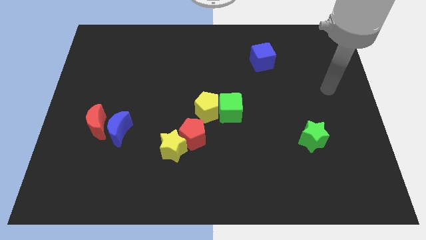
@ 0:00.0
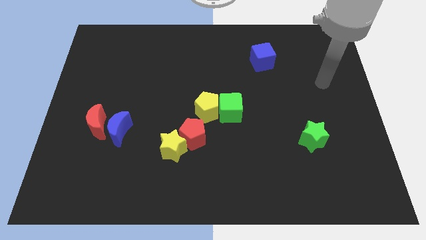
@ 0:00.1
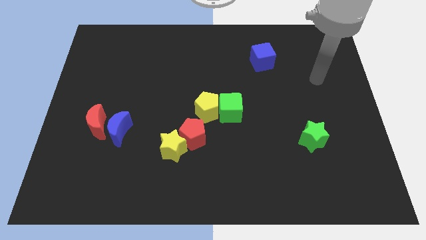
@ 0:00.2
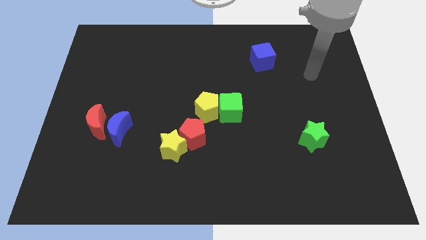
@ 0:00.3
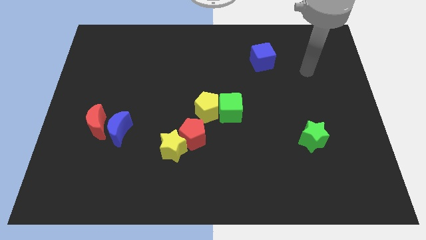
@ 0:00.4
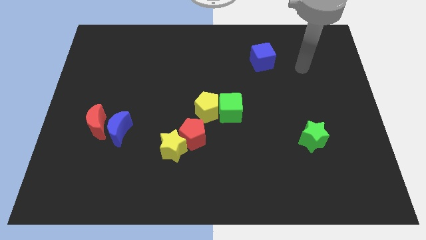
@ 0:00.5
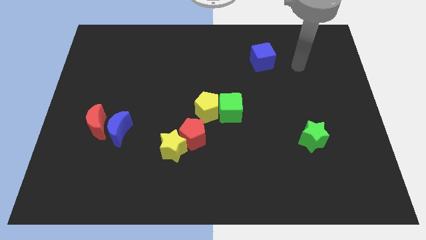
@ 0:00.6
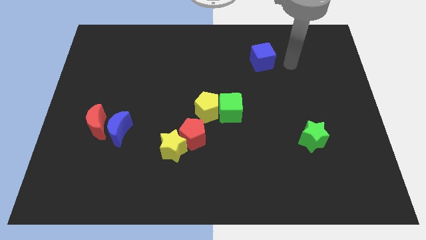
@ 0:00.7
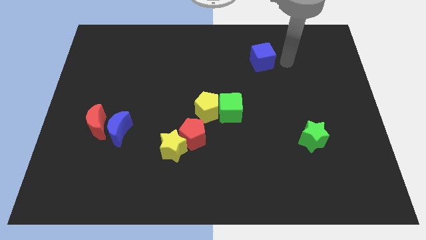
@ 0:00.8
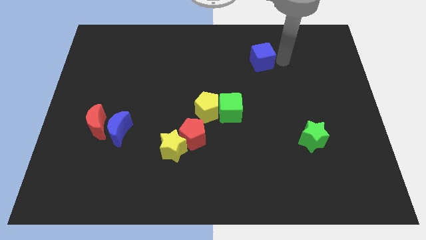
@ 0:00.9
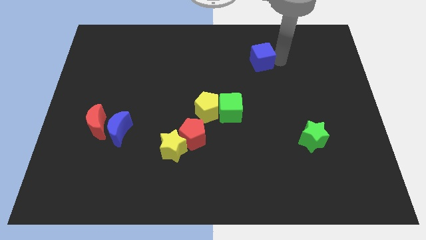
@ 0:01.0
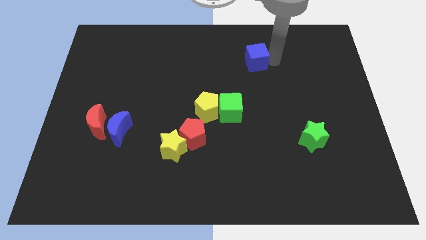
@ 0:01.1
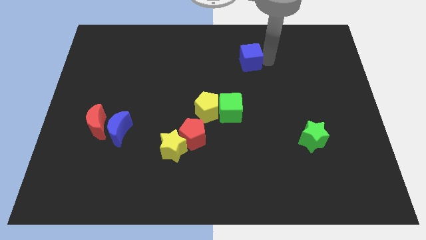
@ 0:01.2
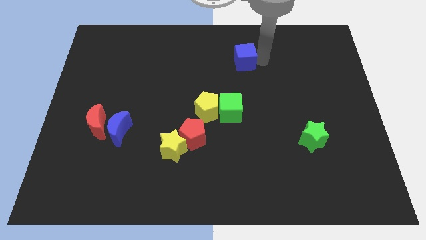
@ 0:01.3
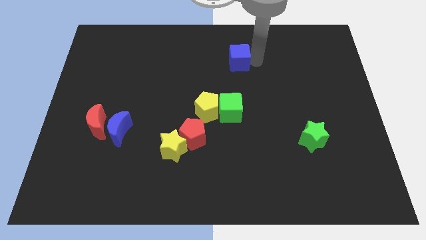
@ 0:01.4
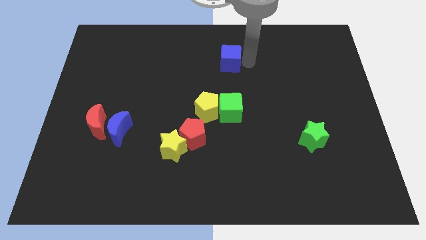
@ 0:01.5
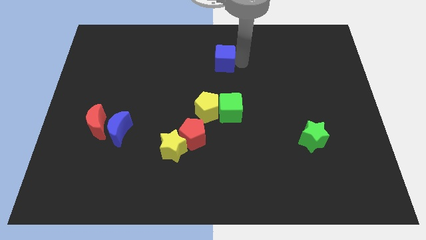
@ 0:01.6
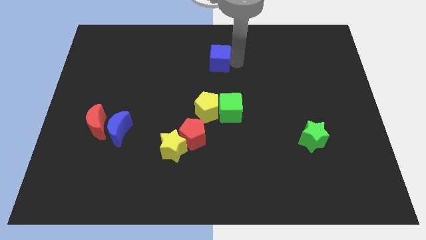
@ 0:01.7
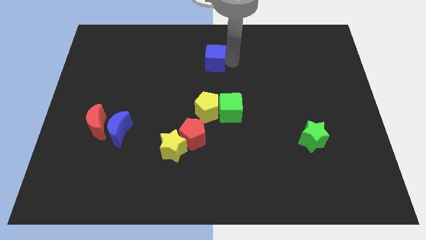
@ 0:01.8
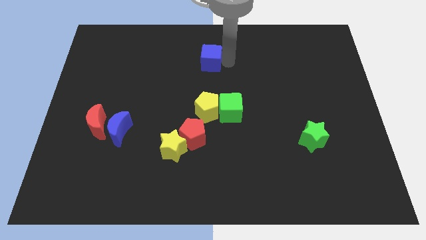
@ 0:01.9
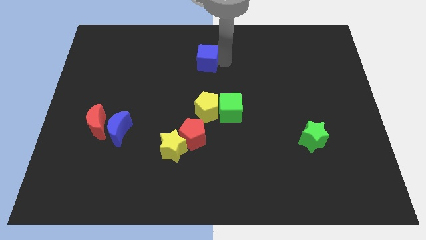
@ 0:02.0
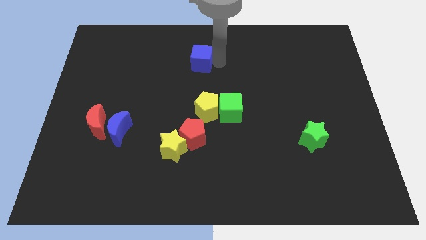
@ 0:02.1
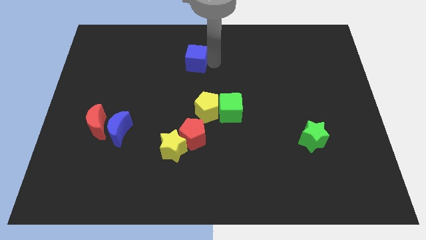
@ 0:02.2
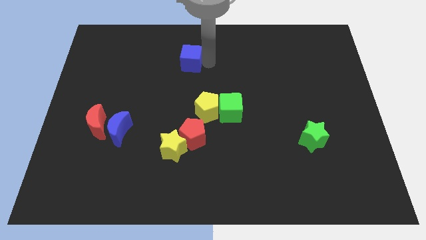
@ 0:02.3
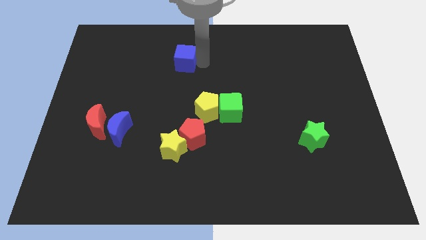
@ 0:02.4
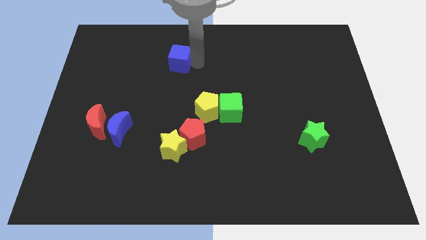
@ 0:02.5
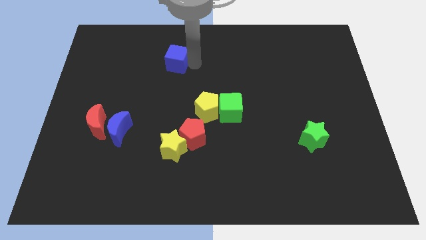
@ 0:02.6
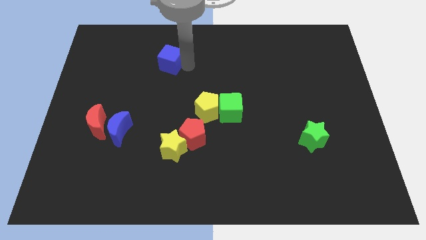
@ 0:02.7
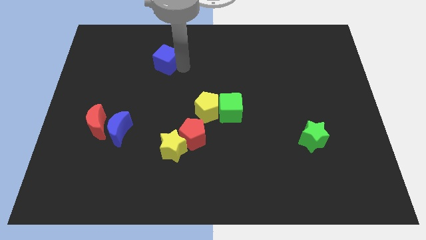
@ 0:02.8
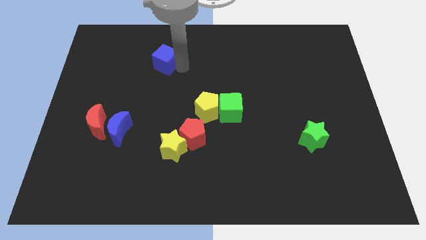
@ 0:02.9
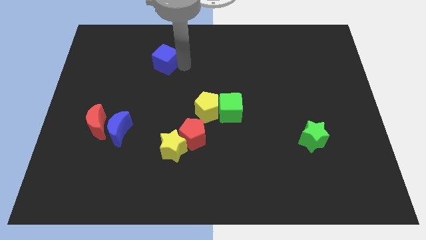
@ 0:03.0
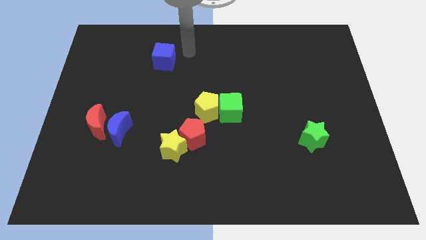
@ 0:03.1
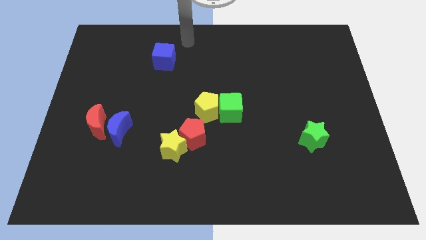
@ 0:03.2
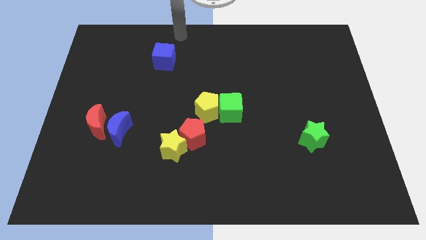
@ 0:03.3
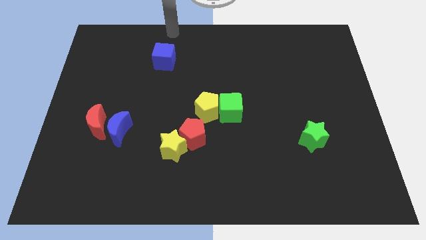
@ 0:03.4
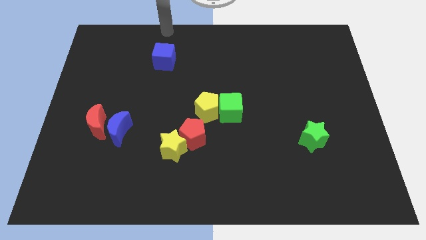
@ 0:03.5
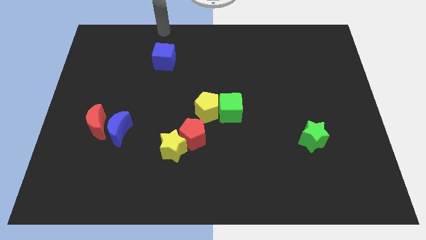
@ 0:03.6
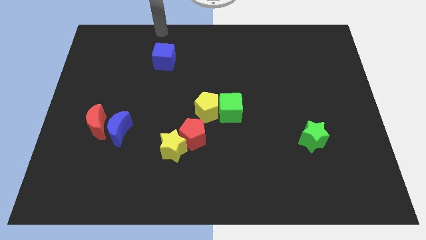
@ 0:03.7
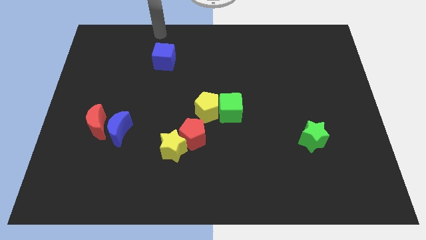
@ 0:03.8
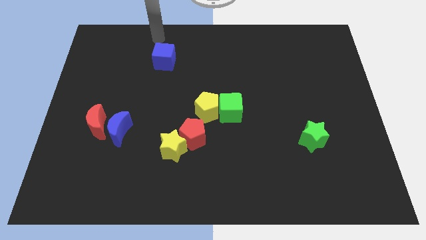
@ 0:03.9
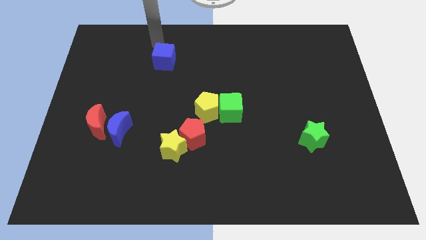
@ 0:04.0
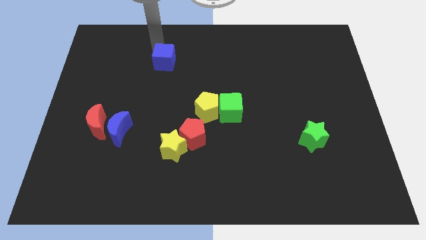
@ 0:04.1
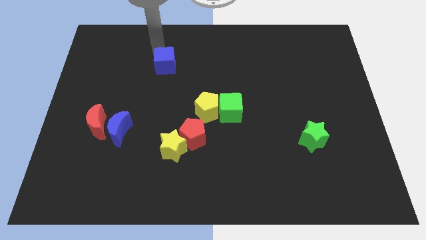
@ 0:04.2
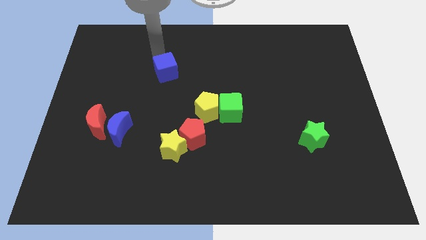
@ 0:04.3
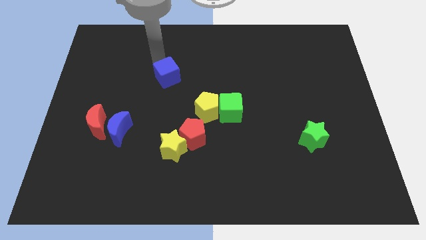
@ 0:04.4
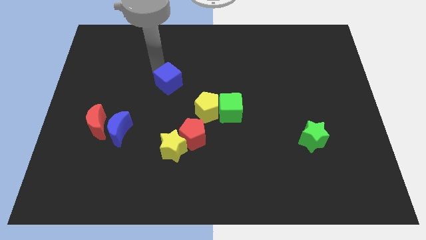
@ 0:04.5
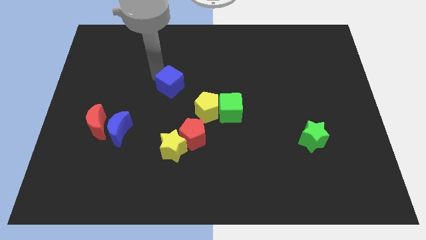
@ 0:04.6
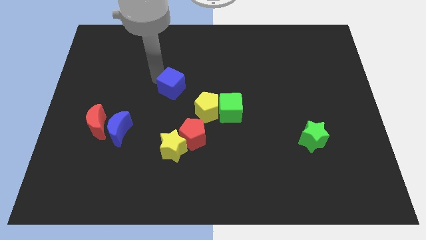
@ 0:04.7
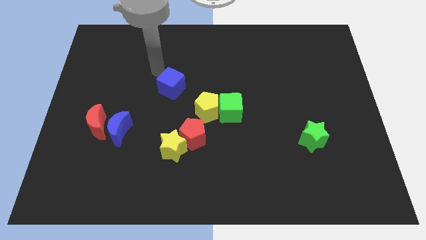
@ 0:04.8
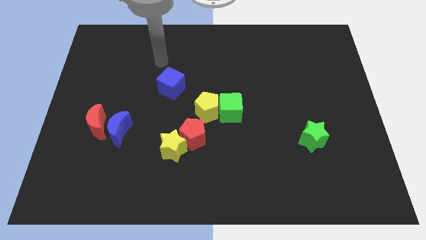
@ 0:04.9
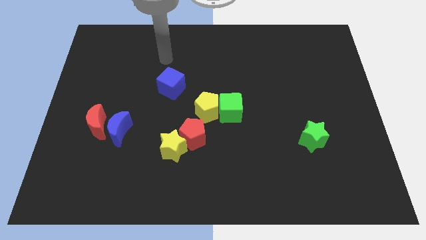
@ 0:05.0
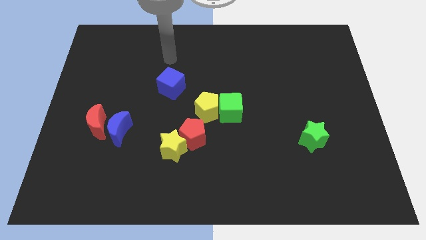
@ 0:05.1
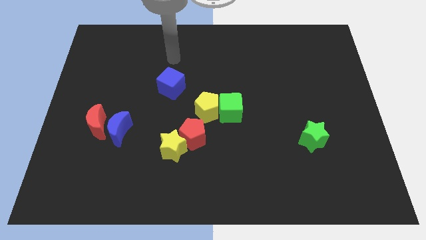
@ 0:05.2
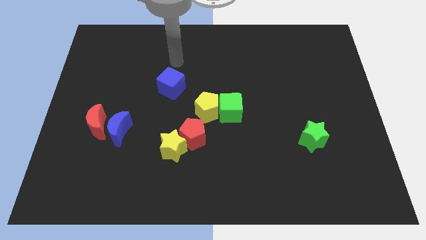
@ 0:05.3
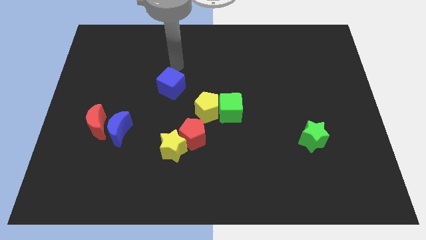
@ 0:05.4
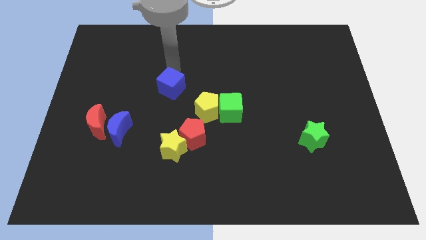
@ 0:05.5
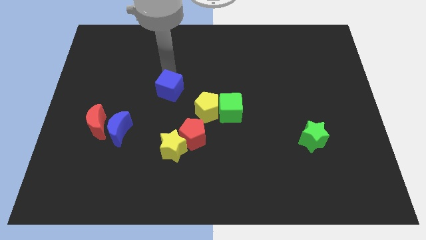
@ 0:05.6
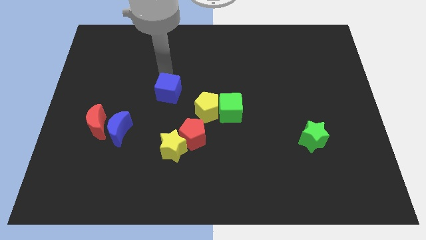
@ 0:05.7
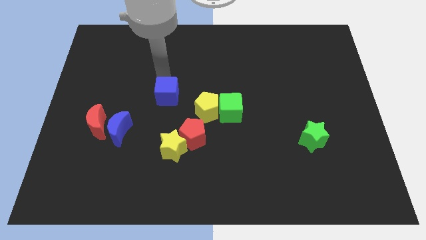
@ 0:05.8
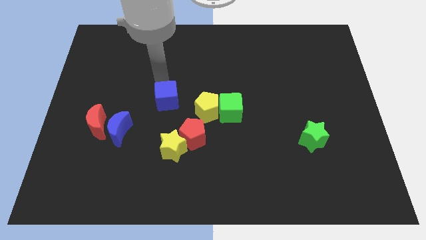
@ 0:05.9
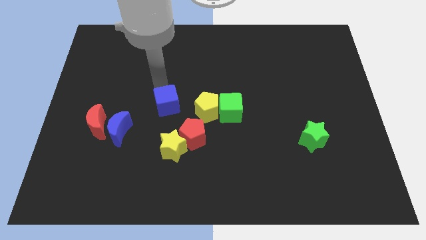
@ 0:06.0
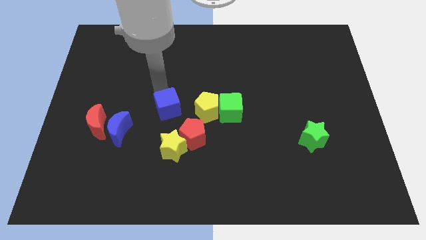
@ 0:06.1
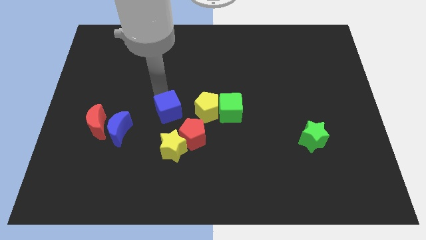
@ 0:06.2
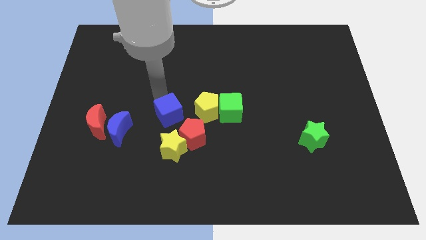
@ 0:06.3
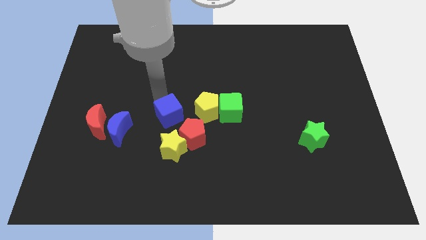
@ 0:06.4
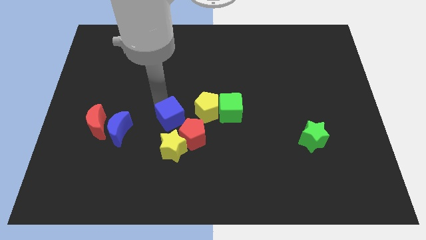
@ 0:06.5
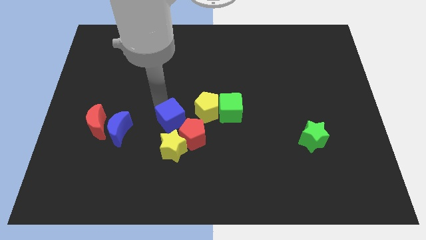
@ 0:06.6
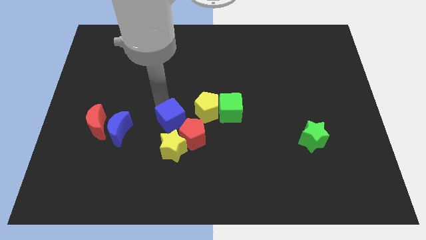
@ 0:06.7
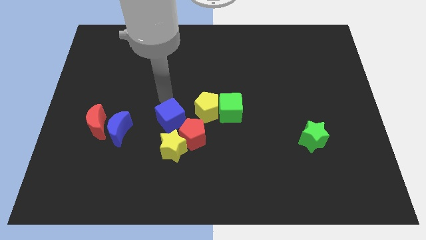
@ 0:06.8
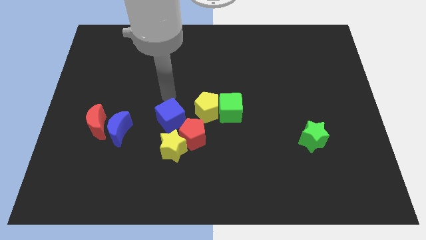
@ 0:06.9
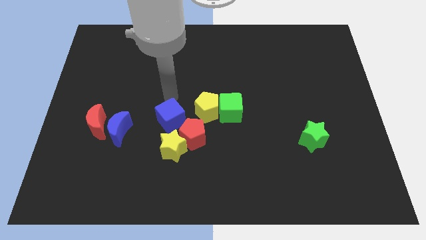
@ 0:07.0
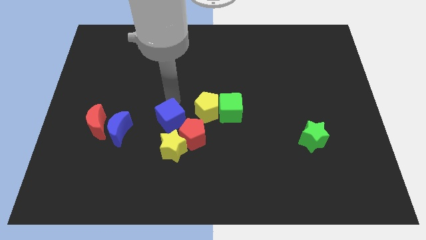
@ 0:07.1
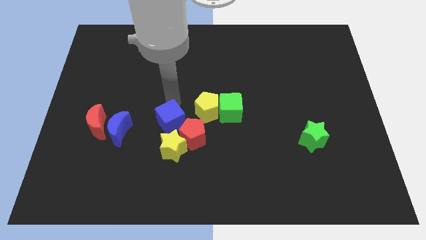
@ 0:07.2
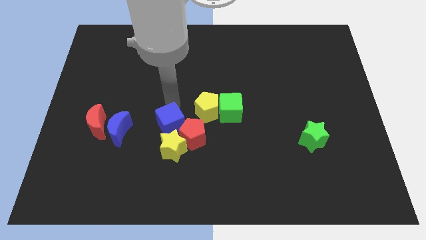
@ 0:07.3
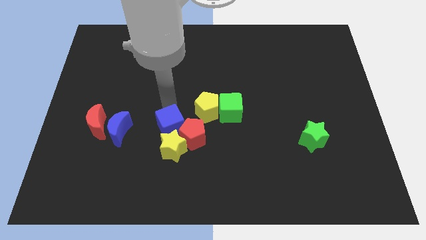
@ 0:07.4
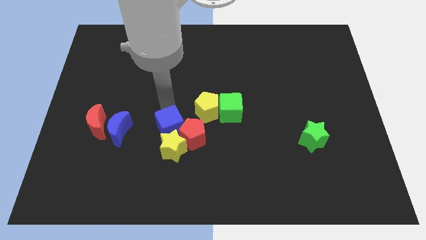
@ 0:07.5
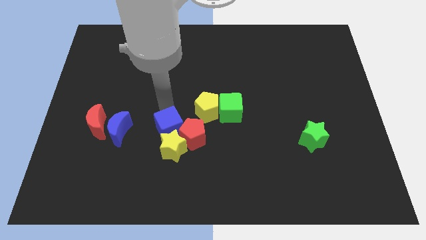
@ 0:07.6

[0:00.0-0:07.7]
put the blue cube close to the yellow star

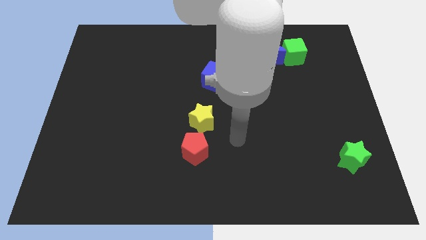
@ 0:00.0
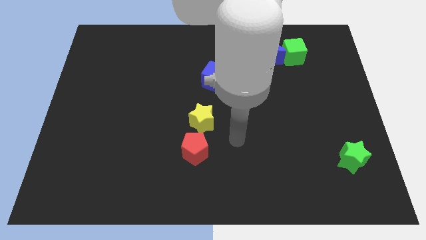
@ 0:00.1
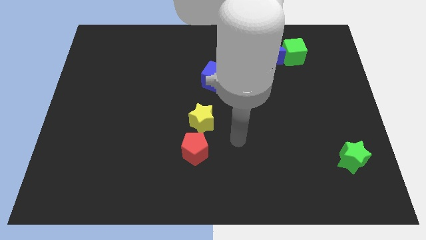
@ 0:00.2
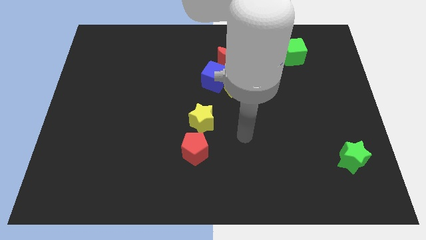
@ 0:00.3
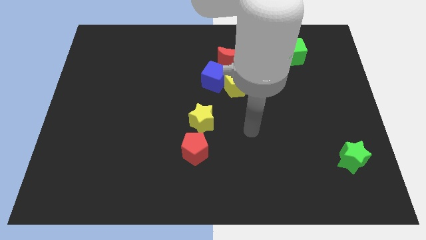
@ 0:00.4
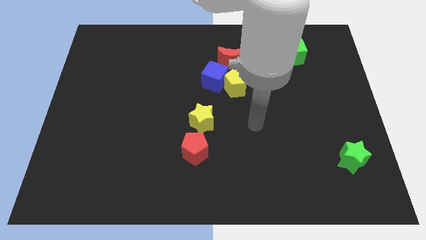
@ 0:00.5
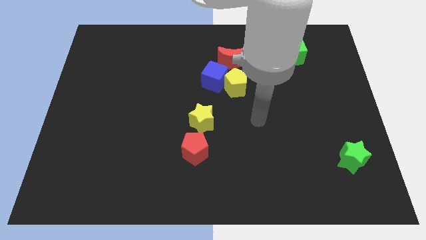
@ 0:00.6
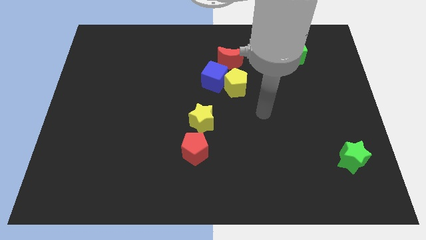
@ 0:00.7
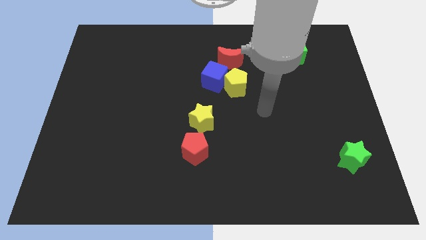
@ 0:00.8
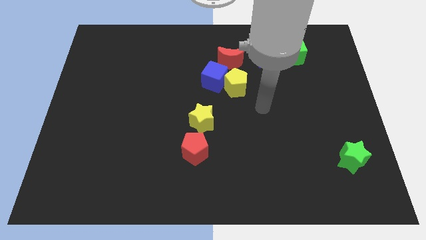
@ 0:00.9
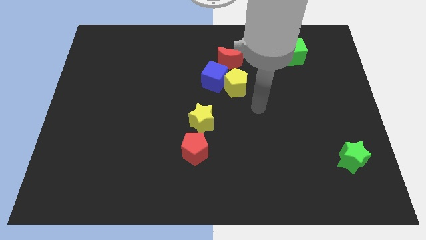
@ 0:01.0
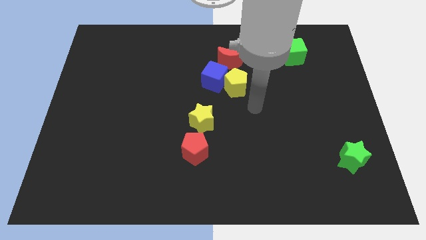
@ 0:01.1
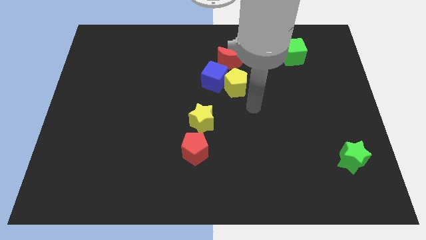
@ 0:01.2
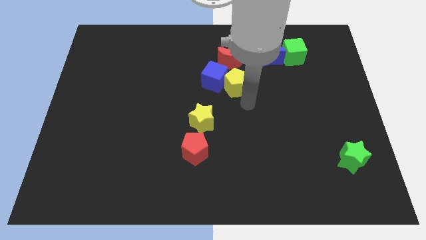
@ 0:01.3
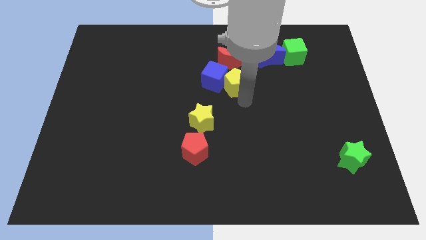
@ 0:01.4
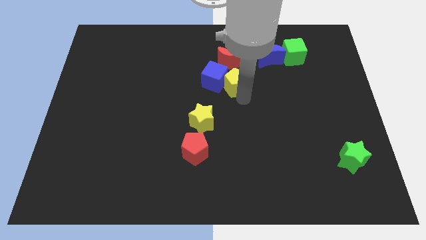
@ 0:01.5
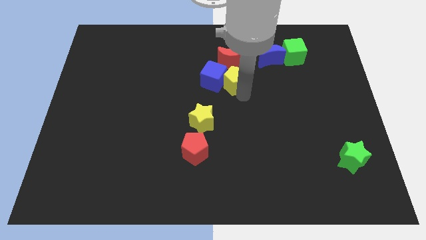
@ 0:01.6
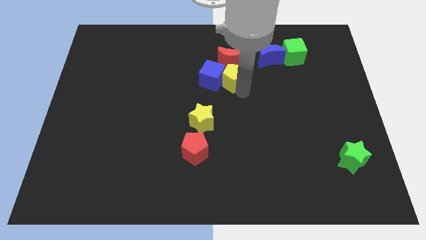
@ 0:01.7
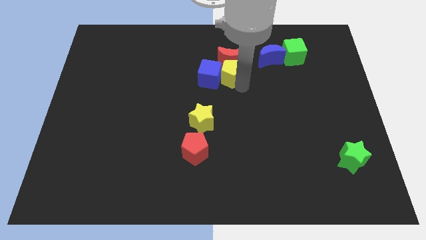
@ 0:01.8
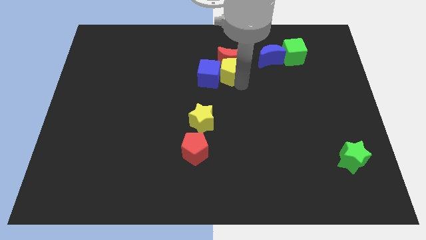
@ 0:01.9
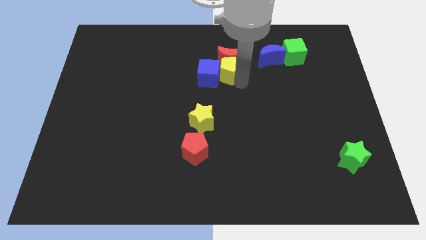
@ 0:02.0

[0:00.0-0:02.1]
slide the yellow pentagon to the red moon
